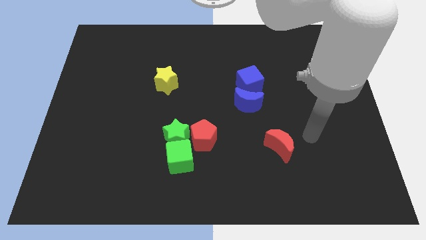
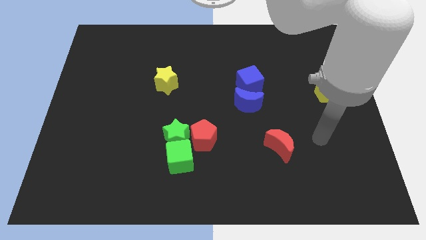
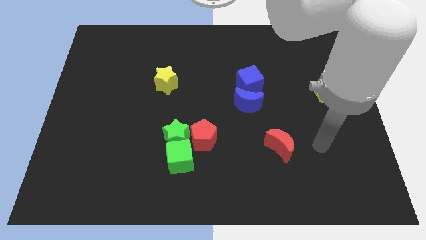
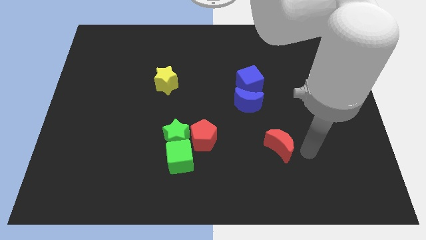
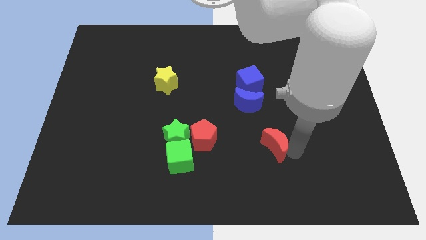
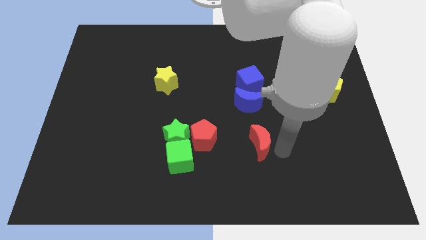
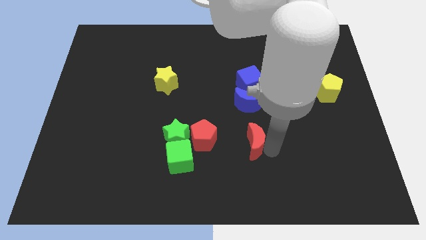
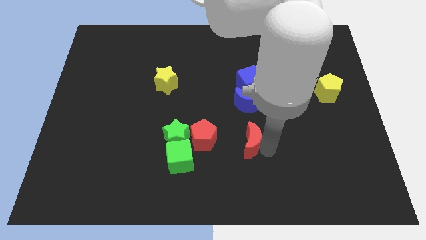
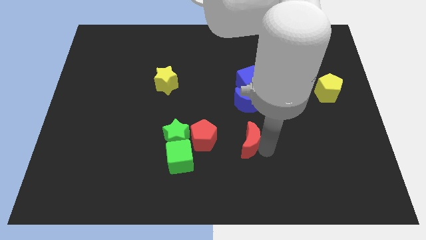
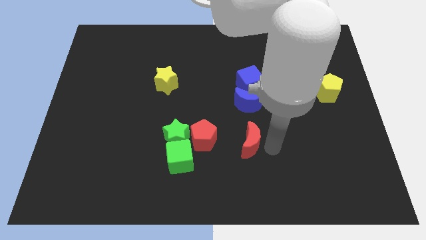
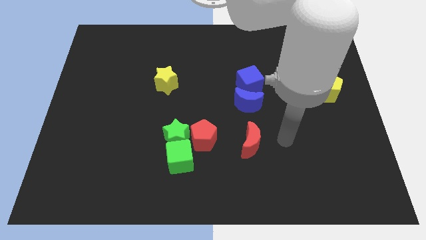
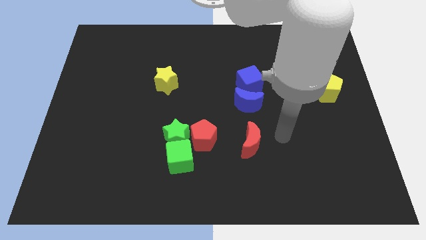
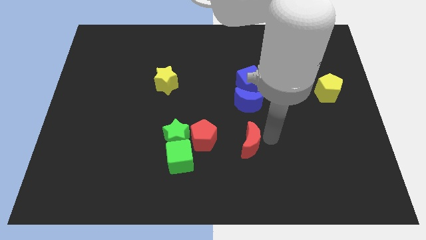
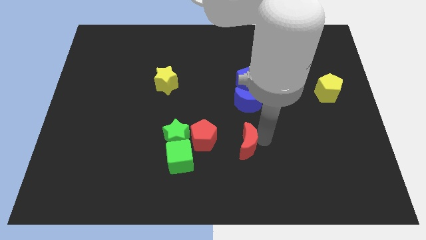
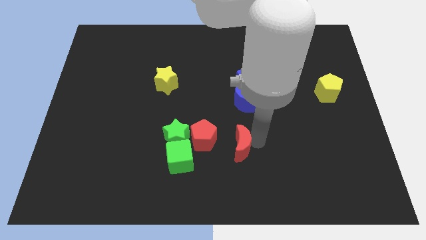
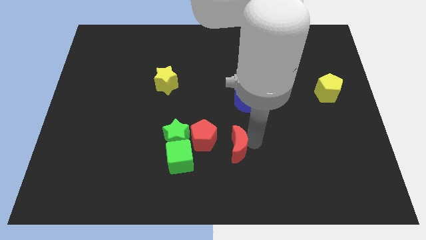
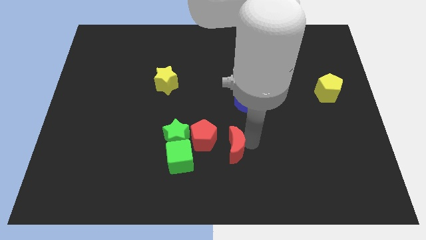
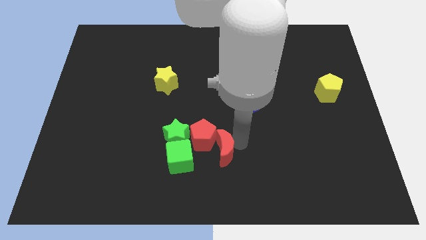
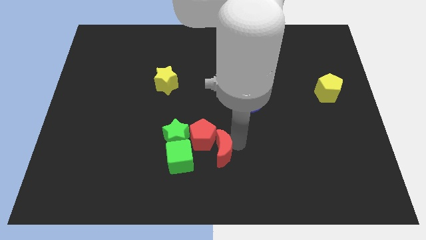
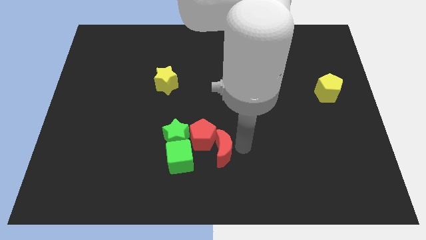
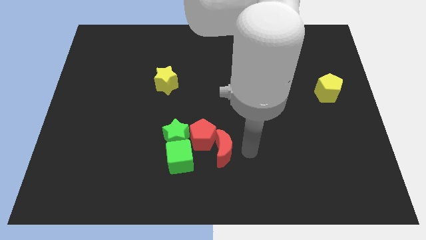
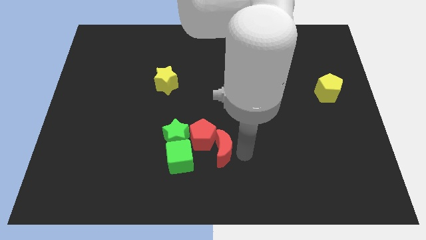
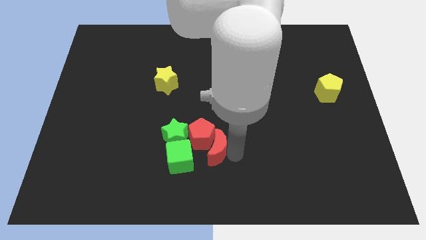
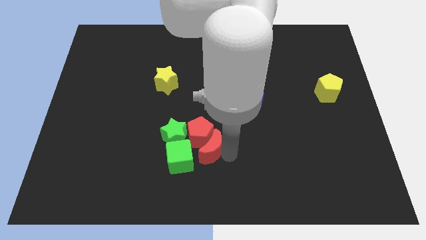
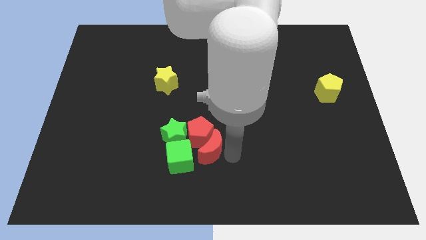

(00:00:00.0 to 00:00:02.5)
push red moon in to red pentagon

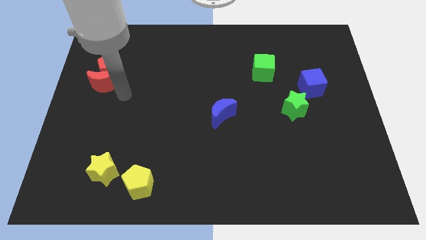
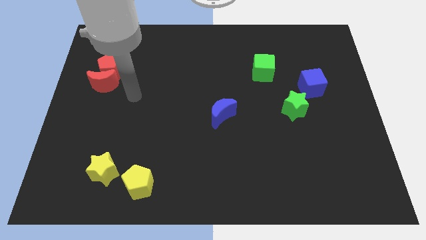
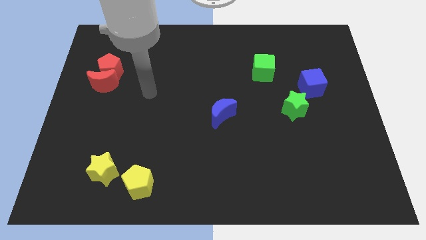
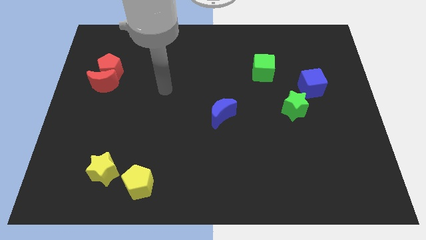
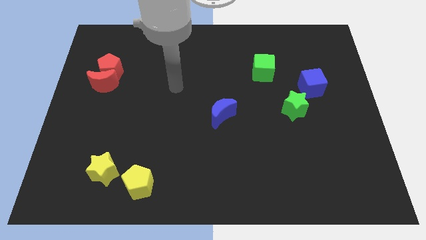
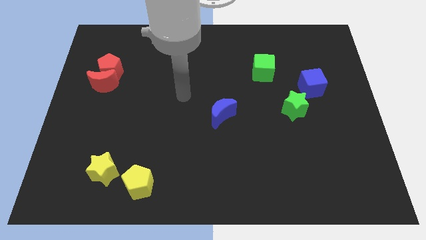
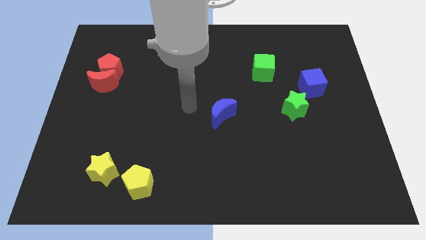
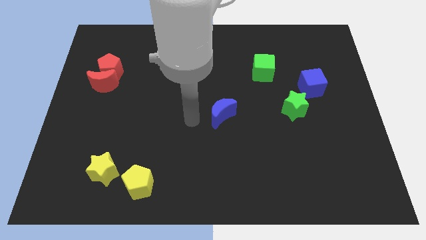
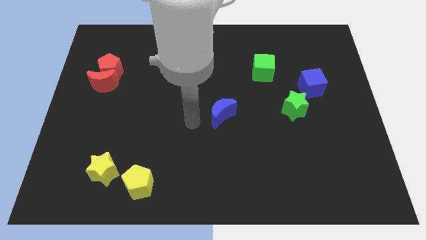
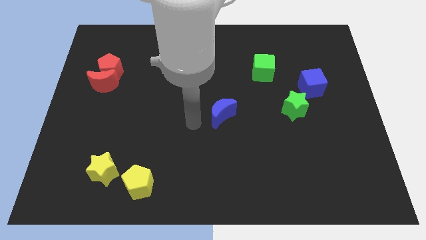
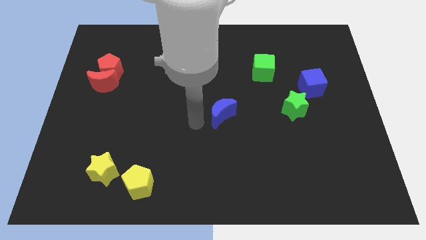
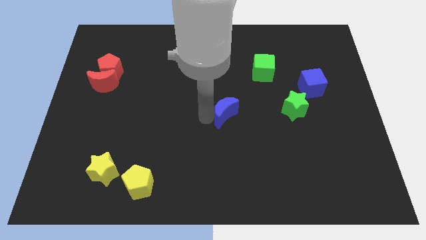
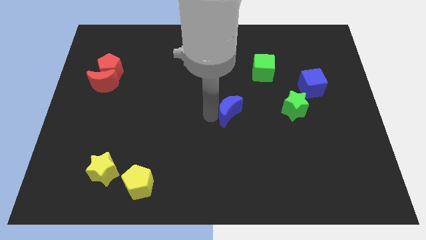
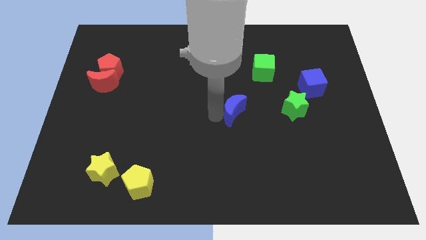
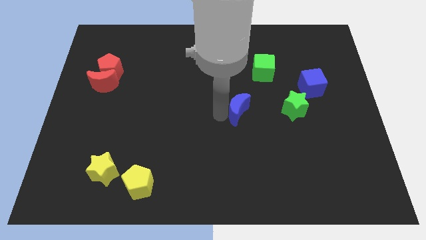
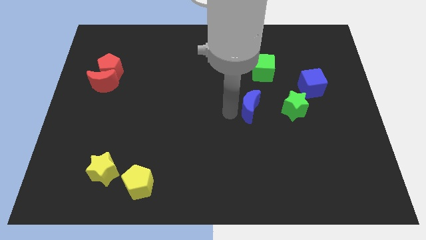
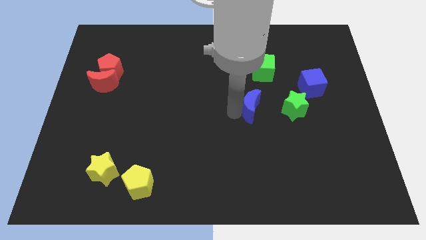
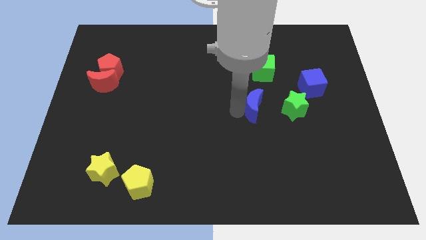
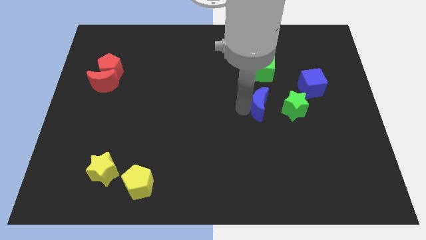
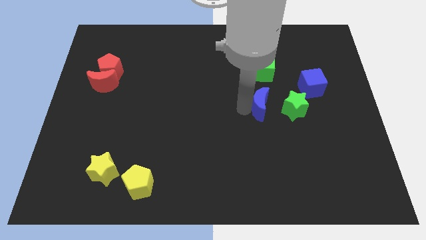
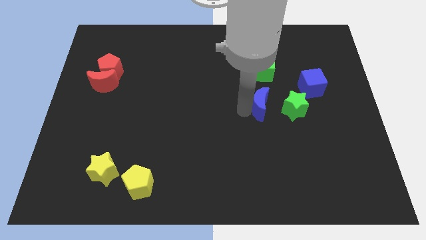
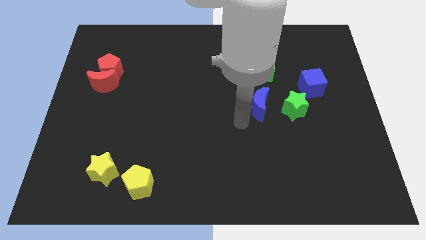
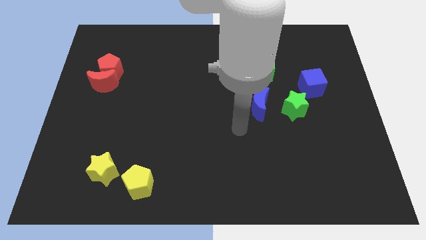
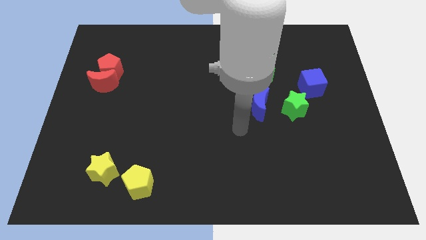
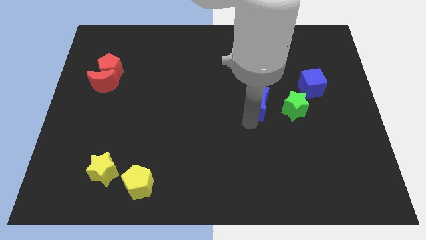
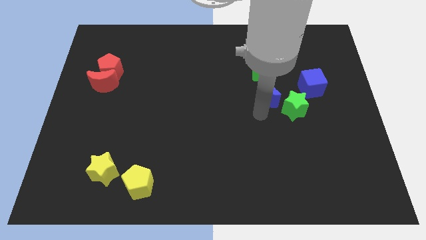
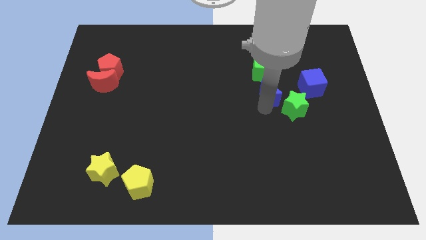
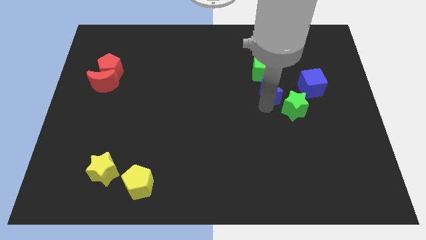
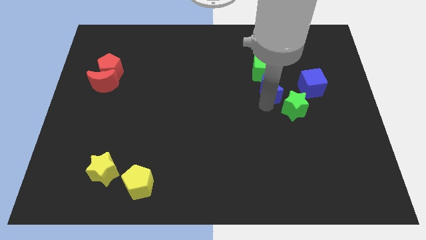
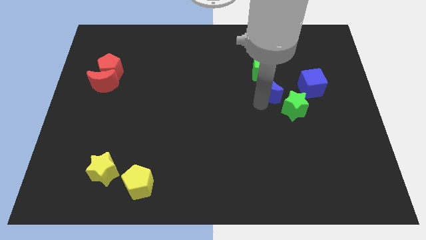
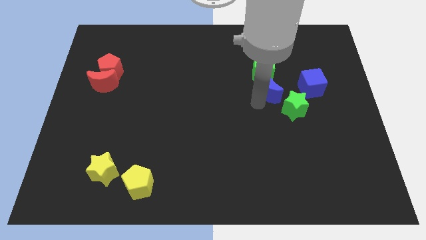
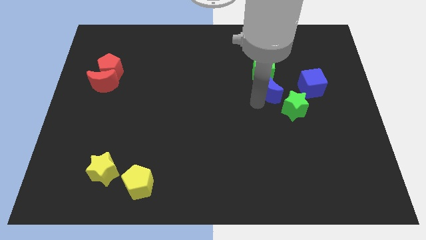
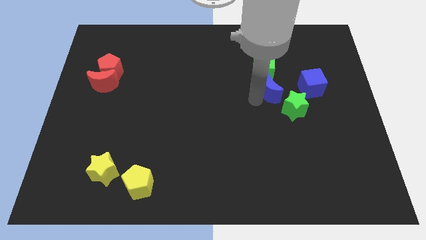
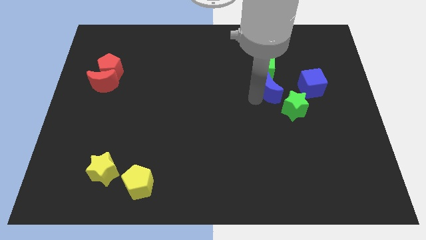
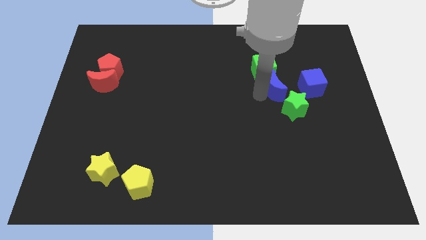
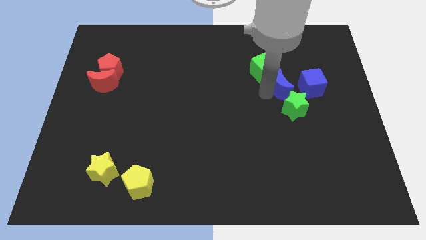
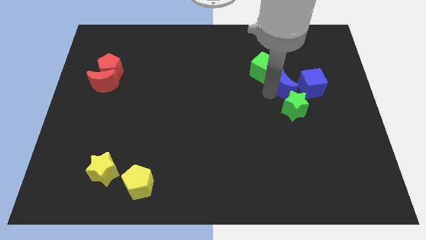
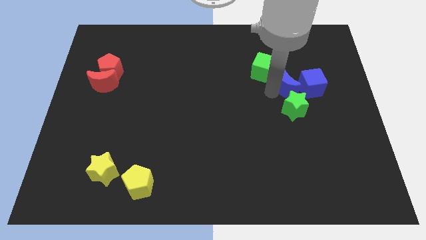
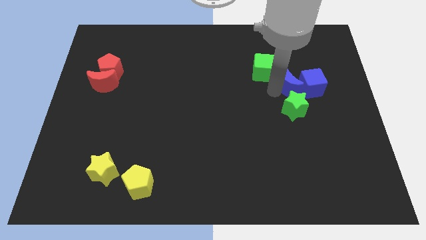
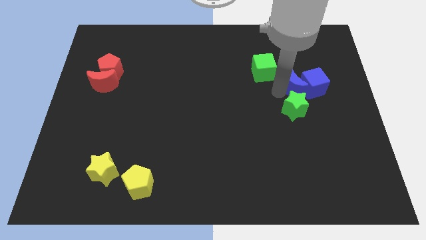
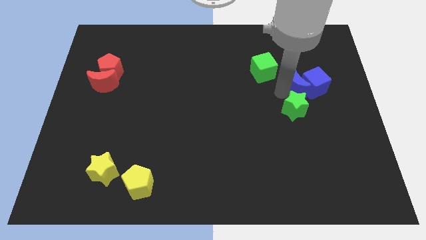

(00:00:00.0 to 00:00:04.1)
move the blue crescent to the left of the blue cube

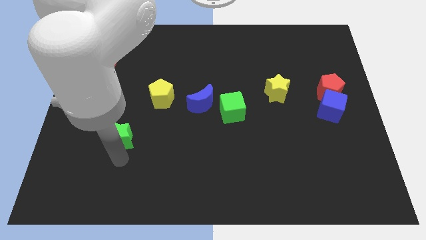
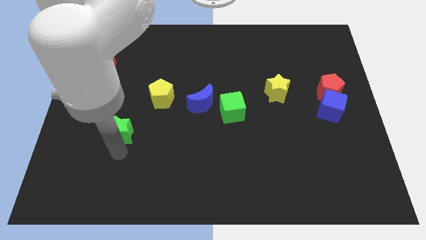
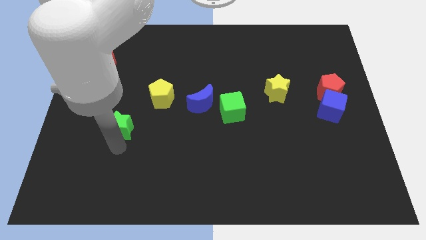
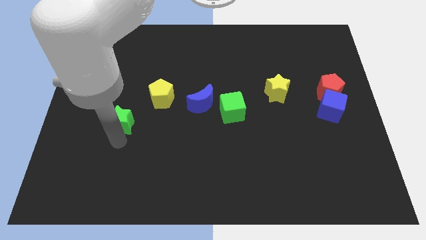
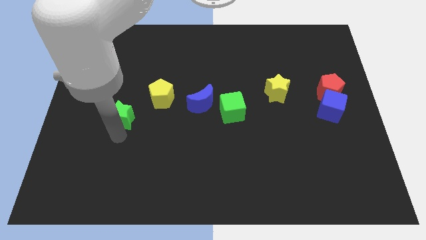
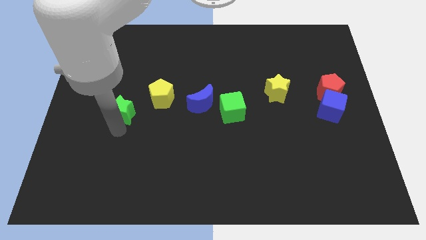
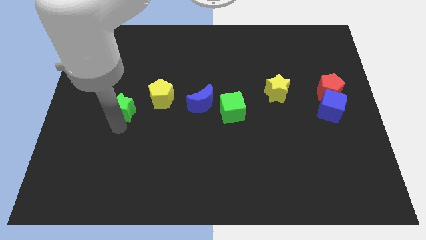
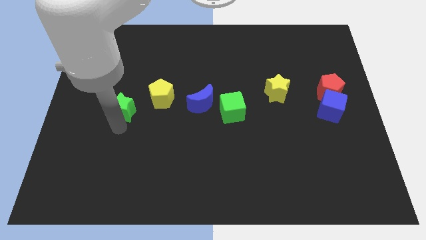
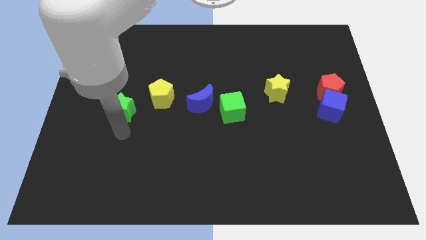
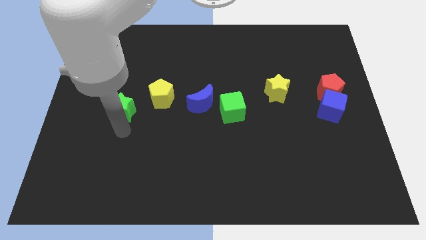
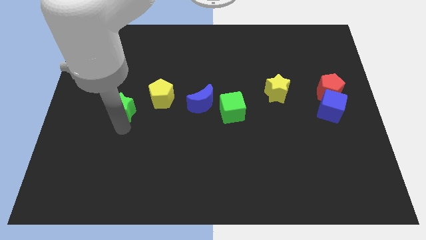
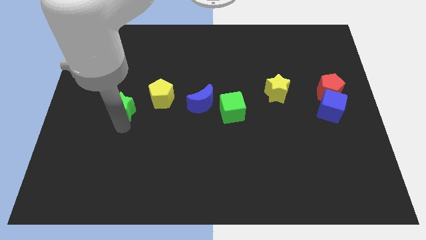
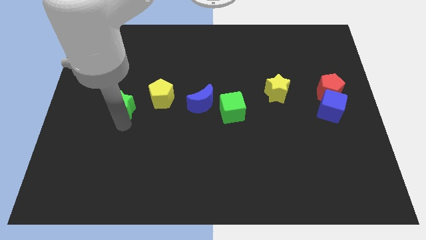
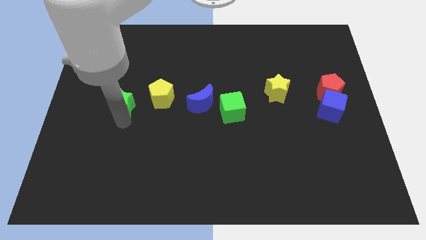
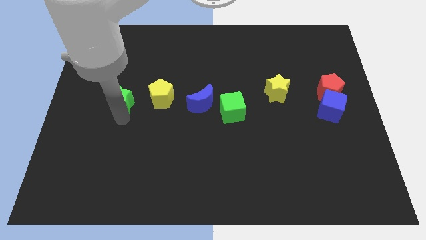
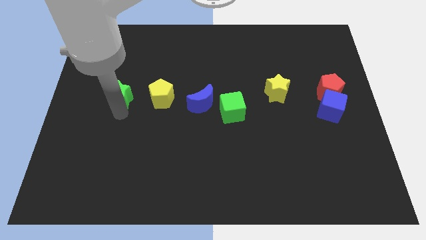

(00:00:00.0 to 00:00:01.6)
push the green star to the left of the yellow pentagon

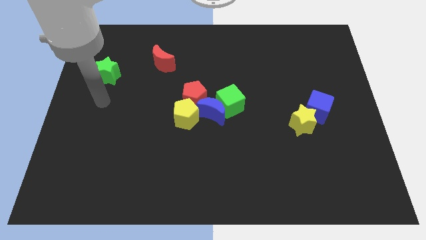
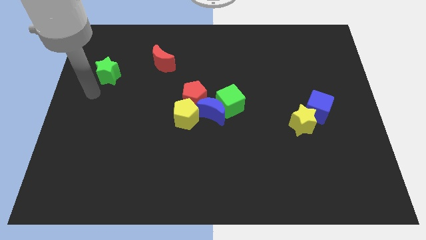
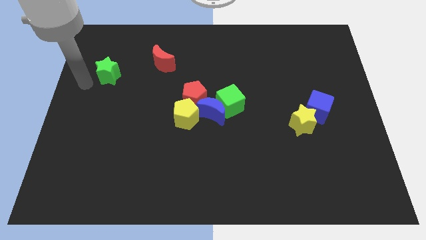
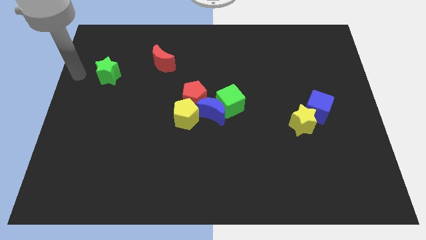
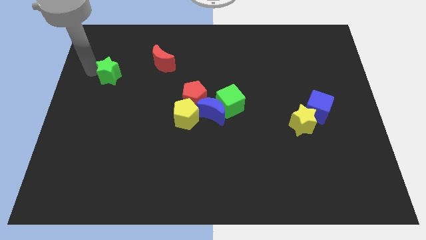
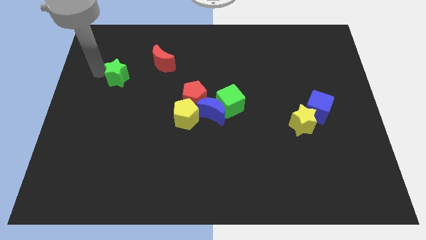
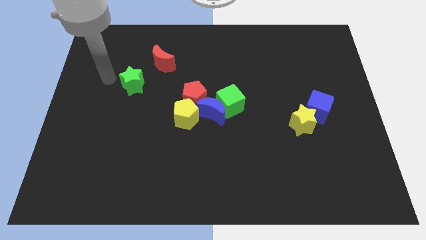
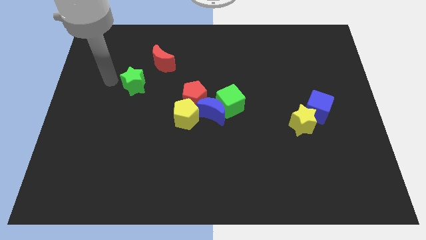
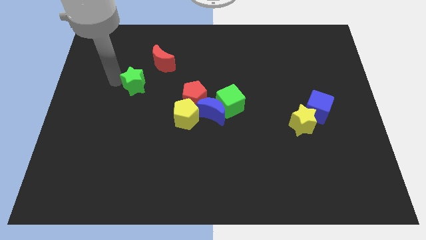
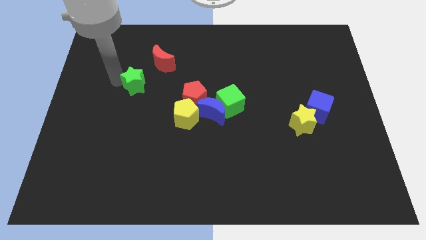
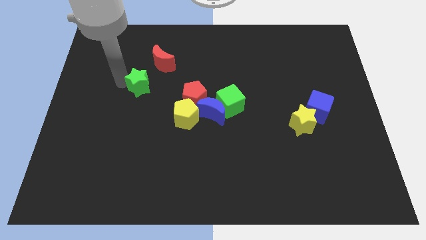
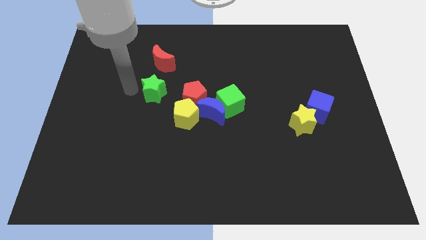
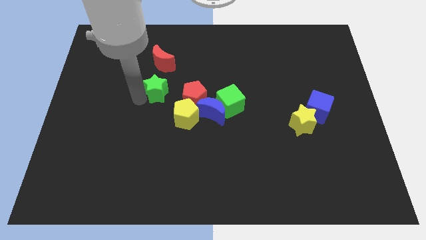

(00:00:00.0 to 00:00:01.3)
push green star towards red pentagon
